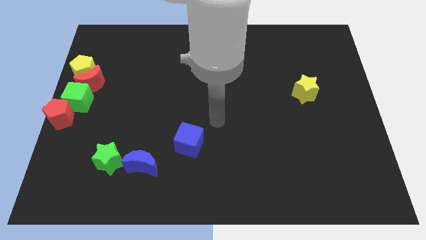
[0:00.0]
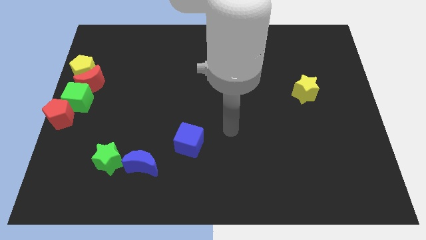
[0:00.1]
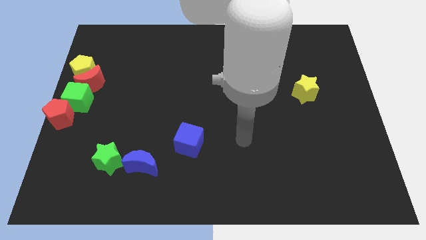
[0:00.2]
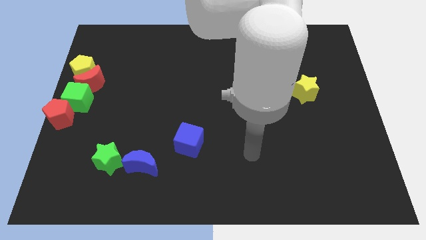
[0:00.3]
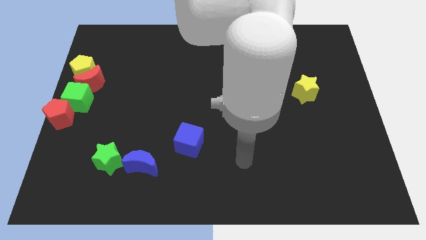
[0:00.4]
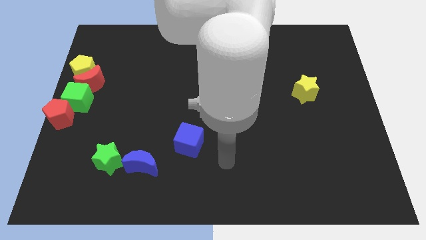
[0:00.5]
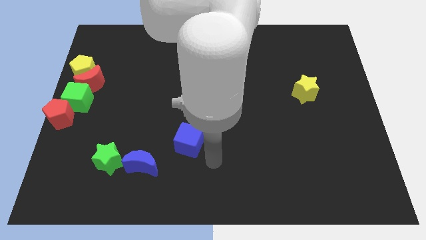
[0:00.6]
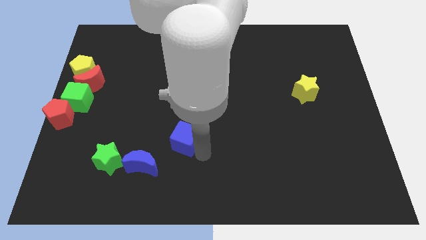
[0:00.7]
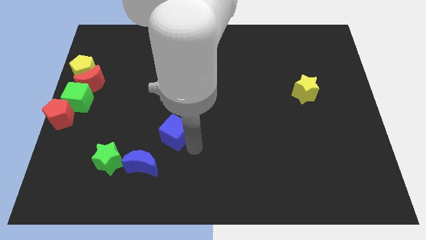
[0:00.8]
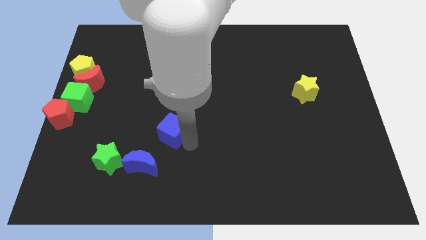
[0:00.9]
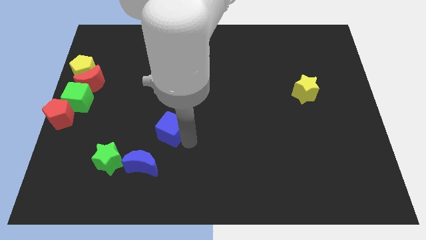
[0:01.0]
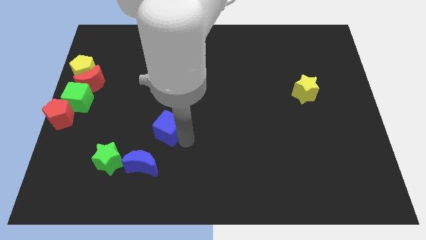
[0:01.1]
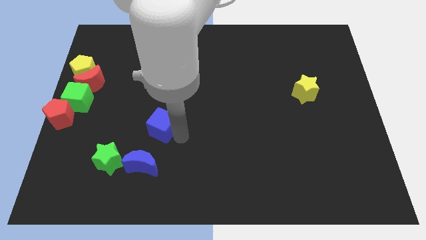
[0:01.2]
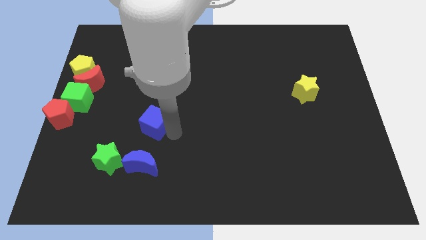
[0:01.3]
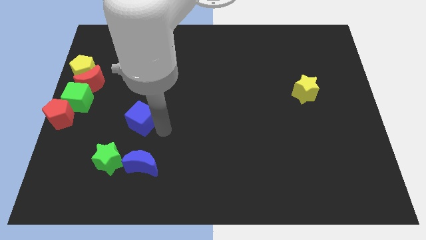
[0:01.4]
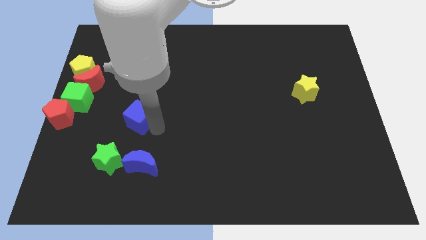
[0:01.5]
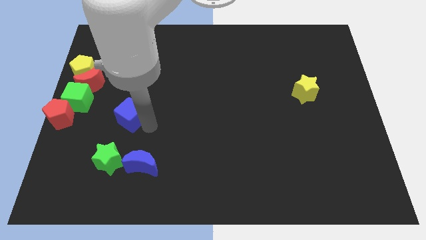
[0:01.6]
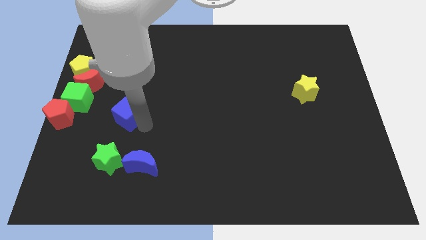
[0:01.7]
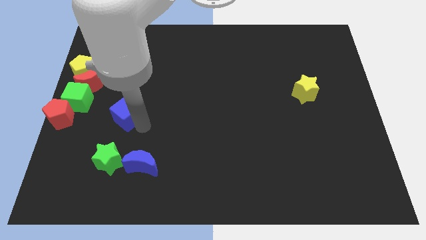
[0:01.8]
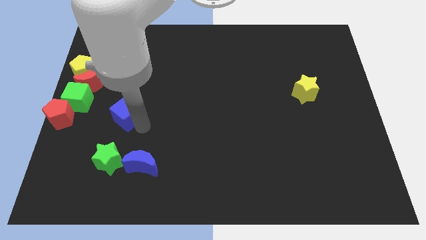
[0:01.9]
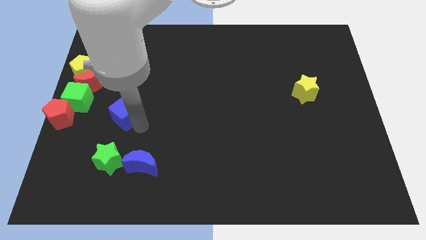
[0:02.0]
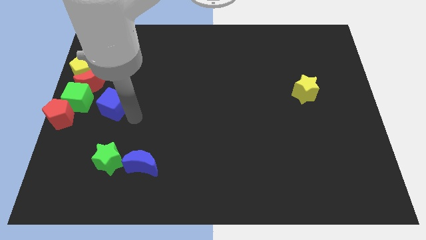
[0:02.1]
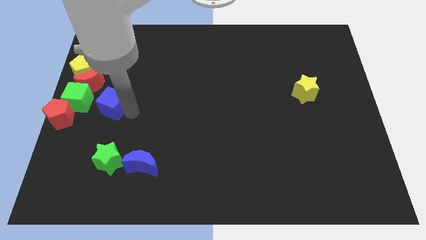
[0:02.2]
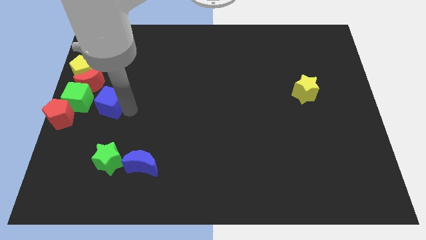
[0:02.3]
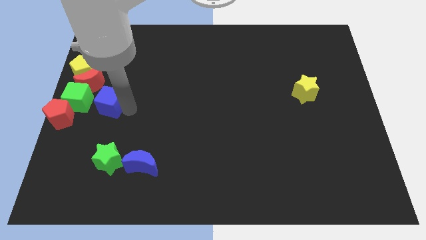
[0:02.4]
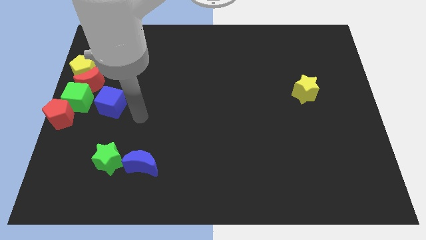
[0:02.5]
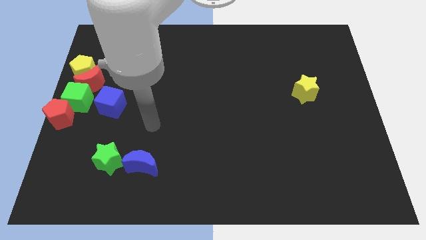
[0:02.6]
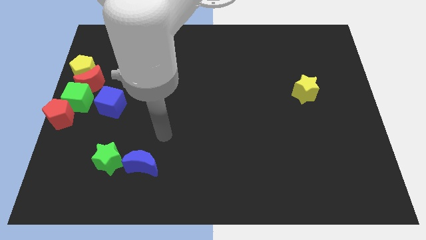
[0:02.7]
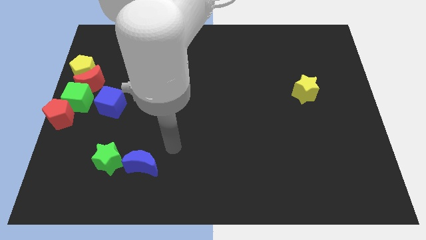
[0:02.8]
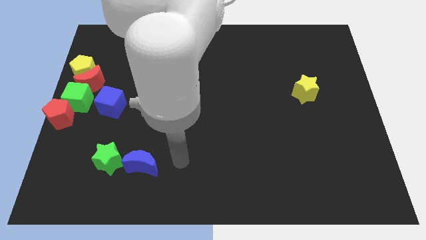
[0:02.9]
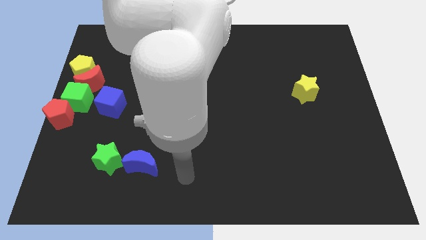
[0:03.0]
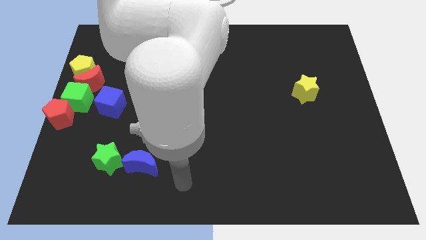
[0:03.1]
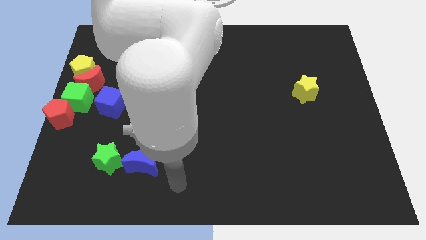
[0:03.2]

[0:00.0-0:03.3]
move the blue cube to the right of the green cube

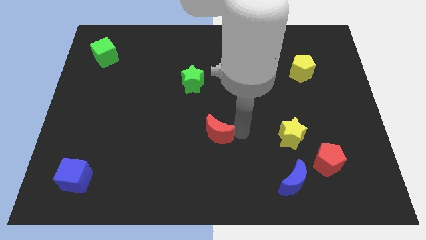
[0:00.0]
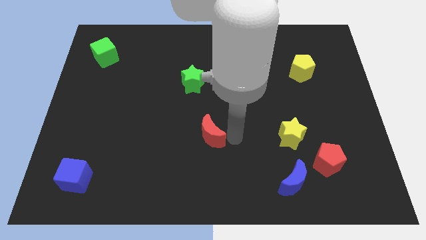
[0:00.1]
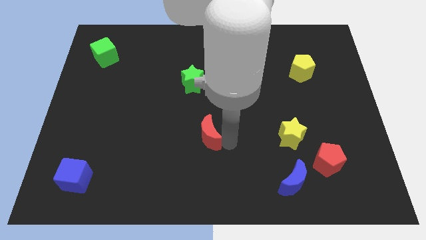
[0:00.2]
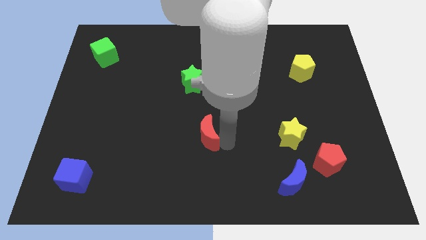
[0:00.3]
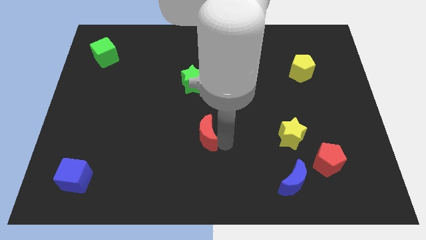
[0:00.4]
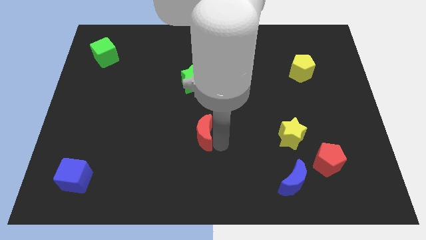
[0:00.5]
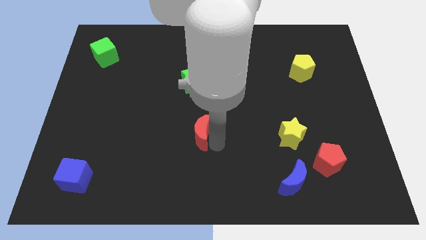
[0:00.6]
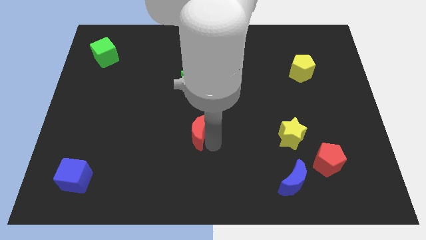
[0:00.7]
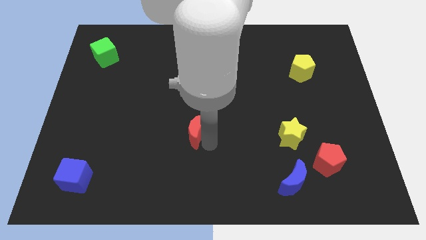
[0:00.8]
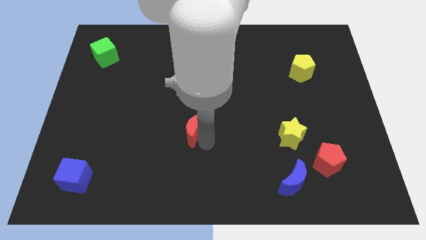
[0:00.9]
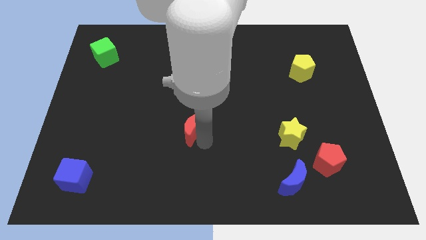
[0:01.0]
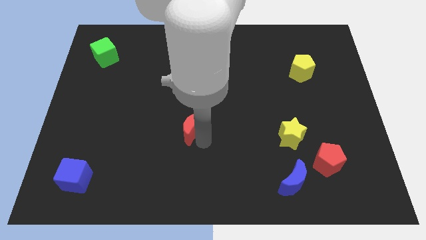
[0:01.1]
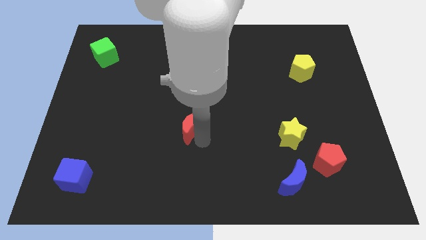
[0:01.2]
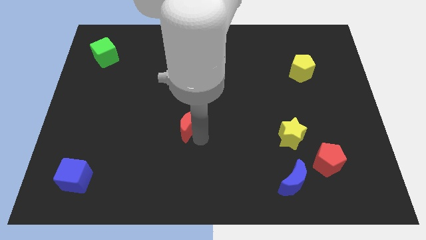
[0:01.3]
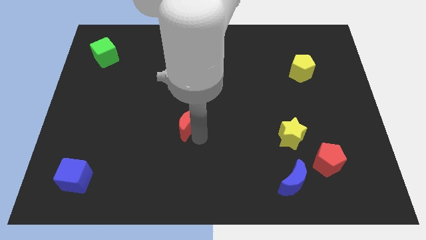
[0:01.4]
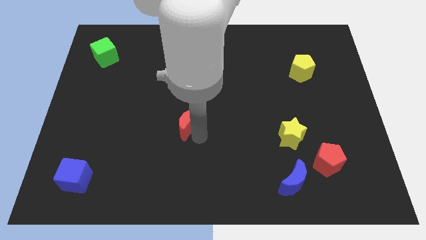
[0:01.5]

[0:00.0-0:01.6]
push the red moon below the green star

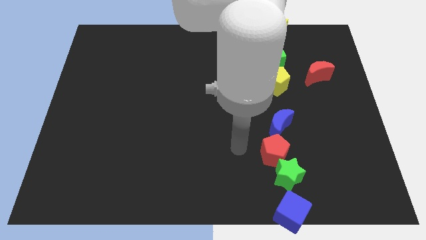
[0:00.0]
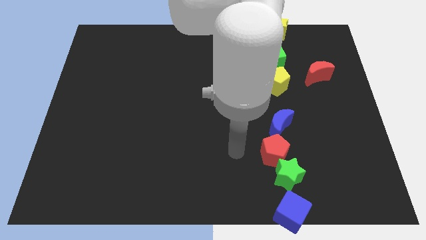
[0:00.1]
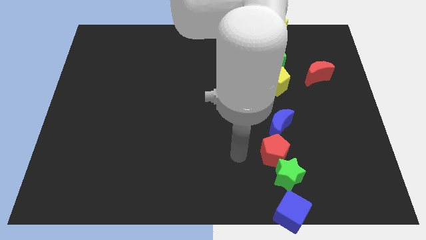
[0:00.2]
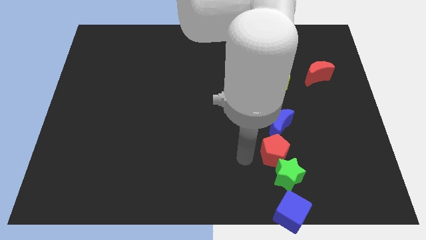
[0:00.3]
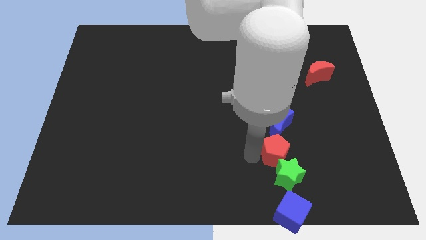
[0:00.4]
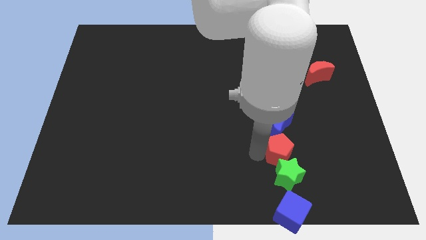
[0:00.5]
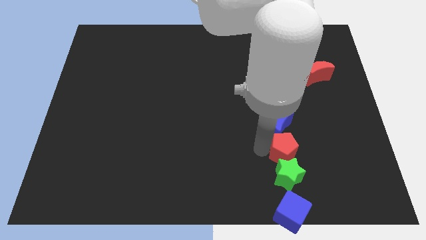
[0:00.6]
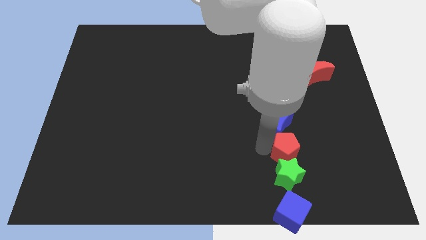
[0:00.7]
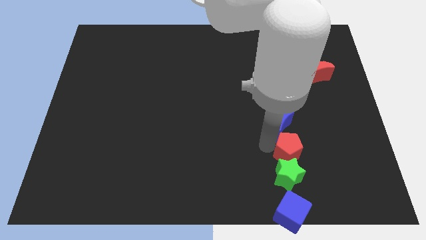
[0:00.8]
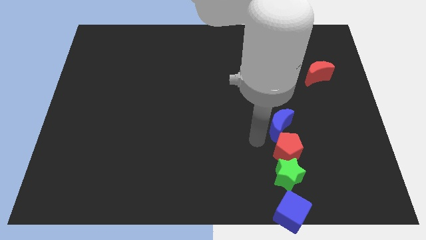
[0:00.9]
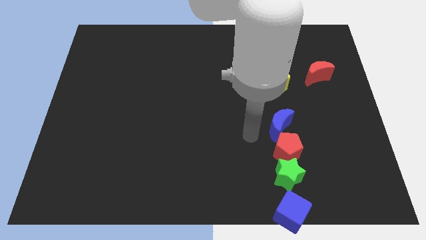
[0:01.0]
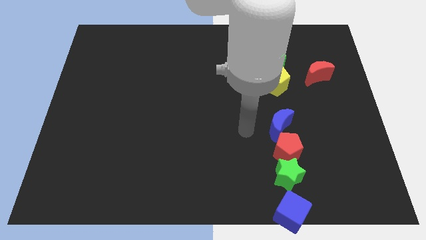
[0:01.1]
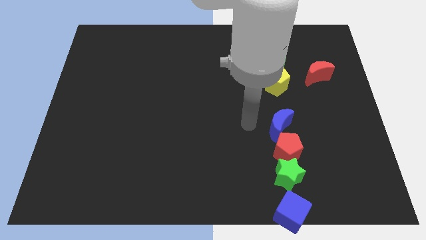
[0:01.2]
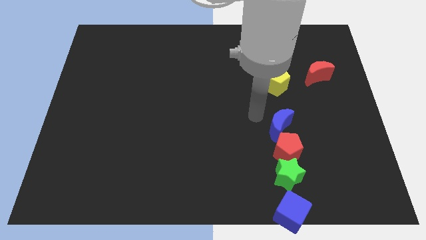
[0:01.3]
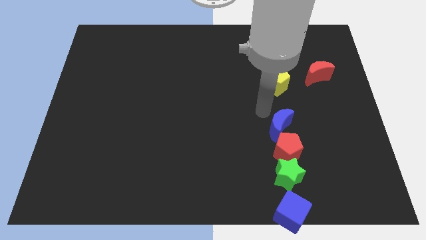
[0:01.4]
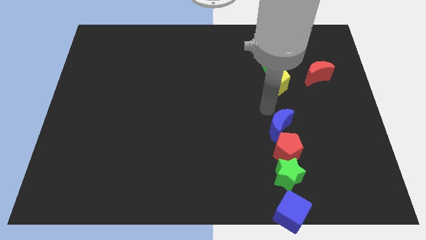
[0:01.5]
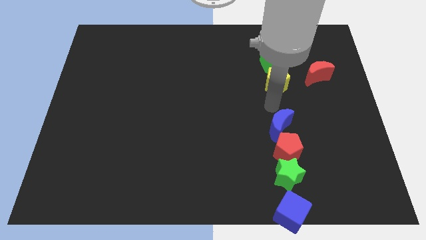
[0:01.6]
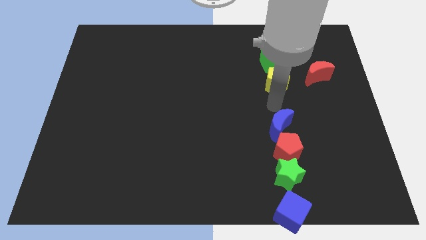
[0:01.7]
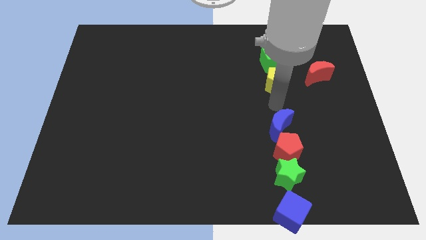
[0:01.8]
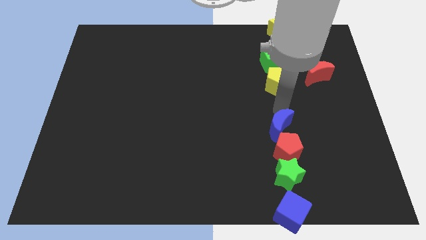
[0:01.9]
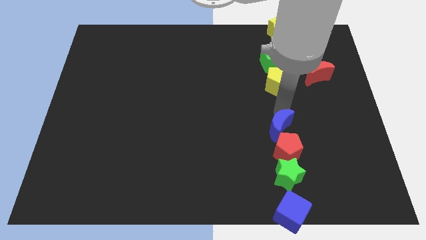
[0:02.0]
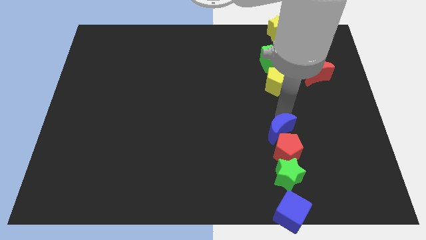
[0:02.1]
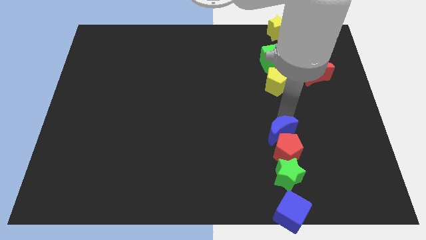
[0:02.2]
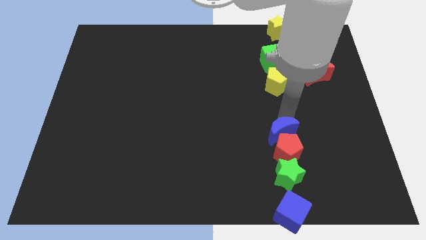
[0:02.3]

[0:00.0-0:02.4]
place the red pentagon under blue crescent

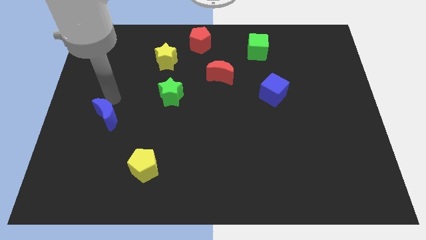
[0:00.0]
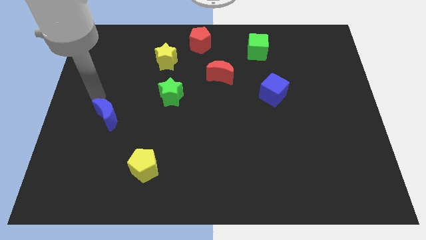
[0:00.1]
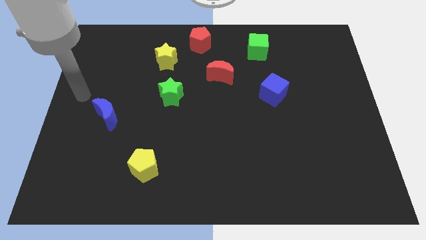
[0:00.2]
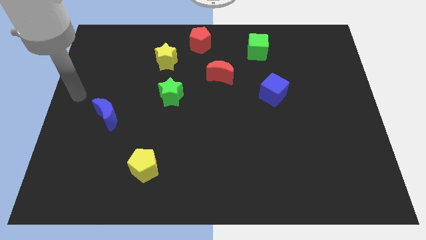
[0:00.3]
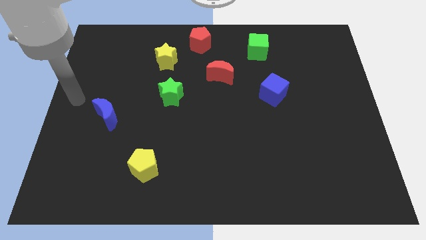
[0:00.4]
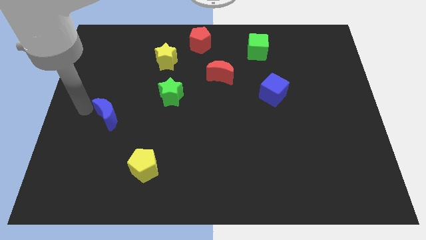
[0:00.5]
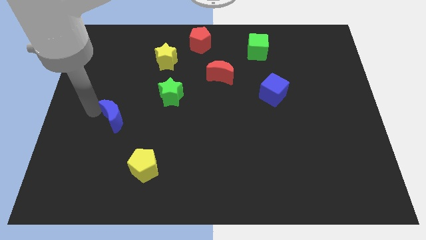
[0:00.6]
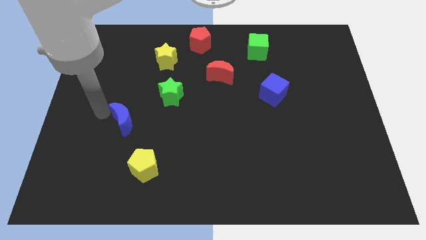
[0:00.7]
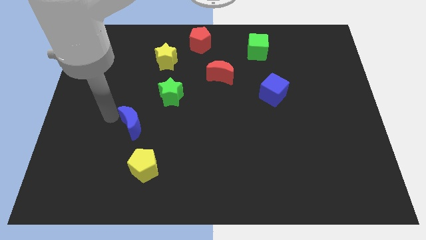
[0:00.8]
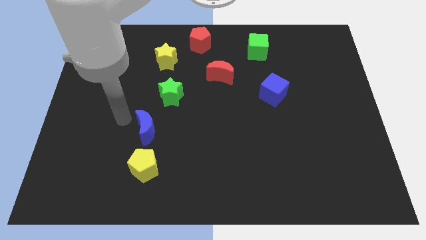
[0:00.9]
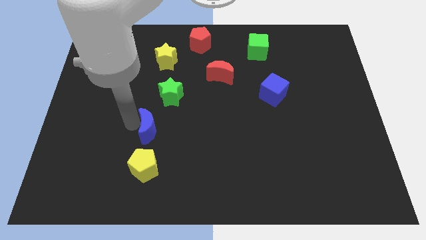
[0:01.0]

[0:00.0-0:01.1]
push the blue crescent to the top of the yellow pentagon

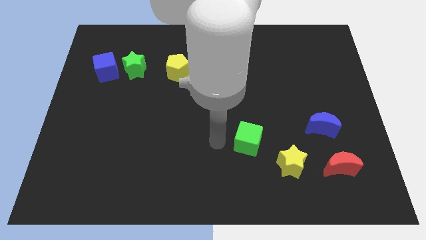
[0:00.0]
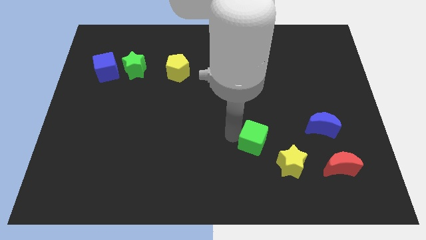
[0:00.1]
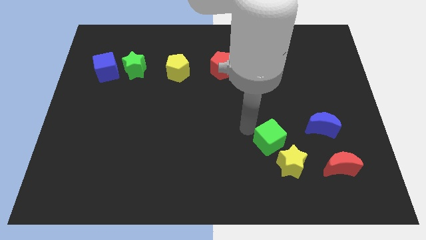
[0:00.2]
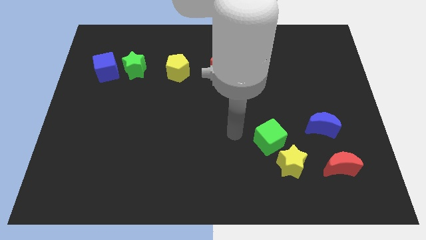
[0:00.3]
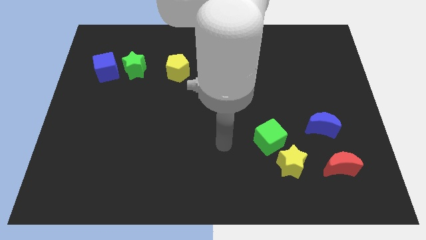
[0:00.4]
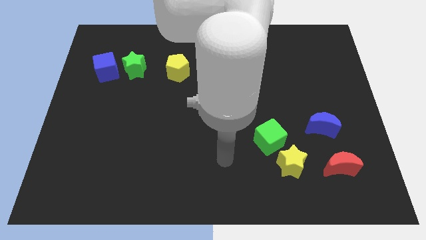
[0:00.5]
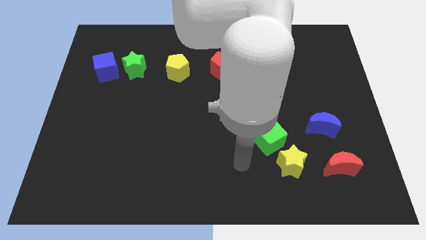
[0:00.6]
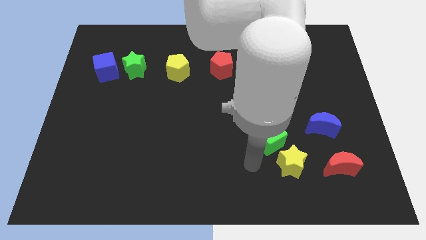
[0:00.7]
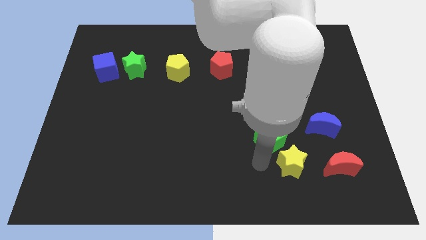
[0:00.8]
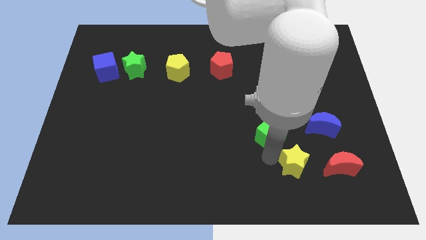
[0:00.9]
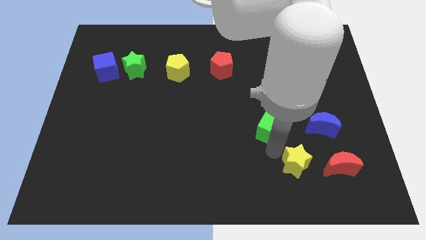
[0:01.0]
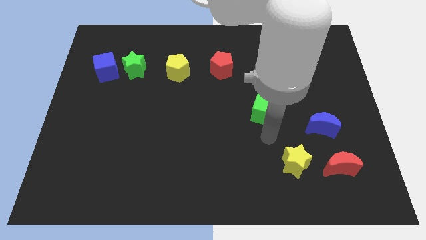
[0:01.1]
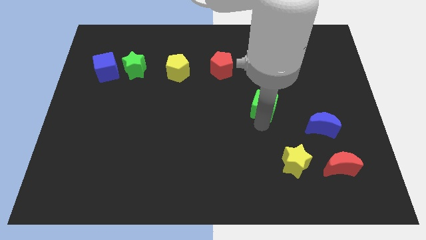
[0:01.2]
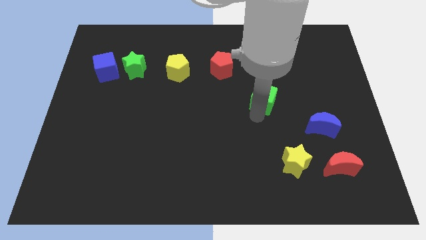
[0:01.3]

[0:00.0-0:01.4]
separate the green cube from the yellow star
